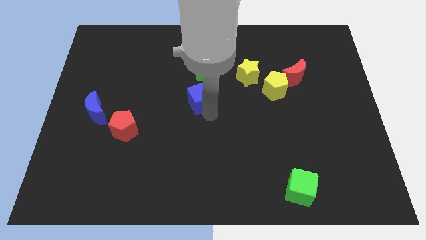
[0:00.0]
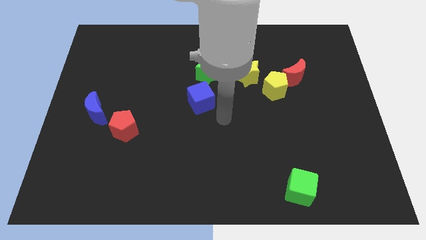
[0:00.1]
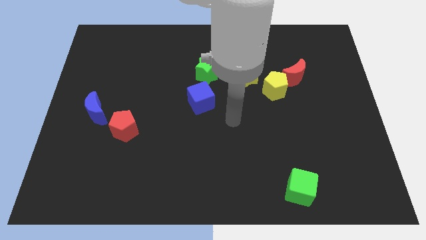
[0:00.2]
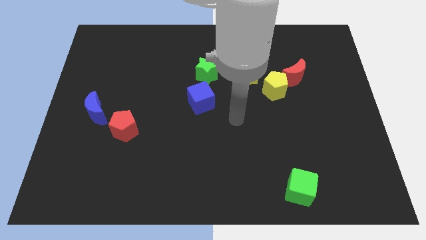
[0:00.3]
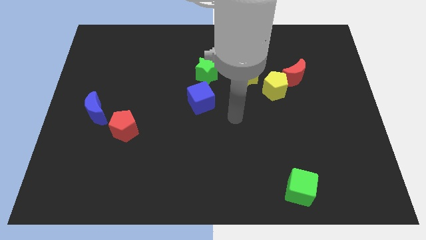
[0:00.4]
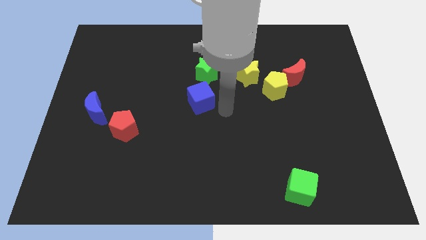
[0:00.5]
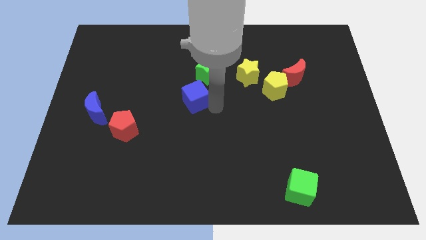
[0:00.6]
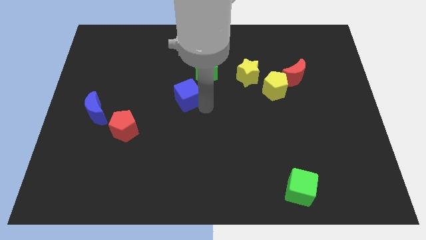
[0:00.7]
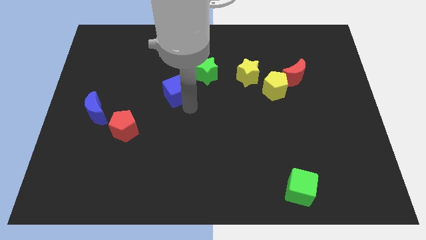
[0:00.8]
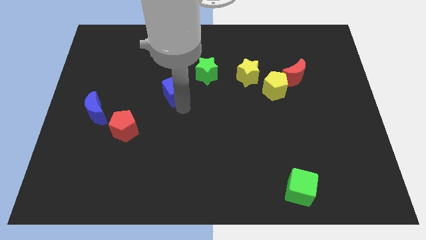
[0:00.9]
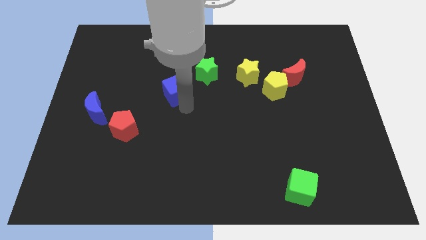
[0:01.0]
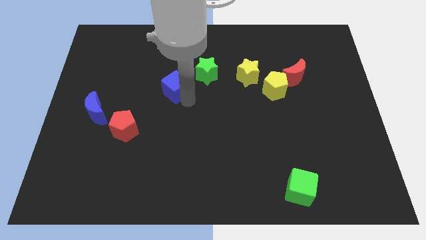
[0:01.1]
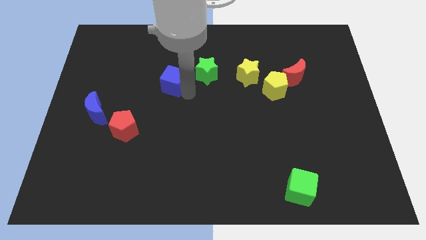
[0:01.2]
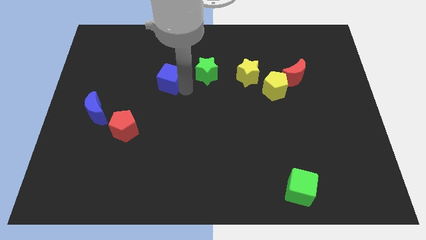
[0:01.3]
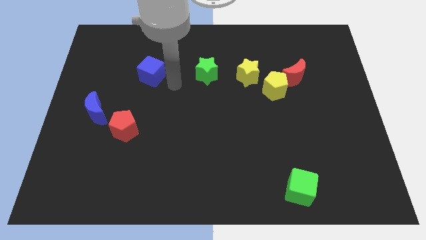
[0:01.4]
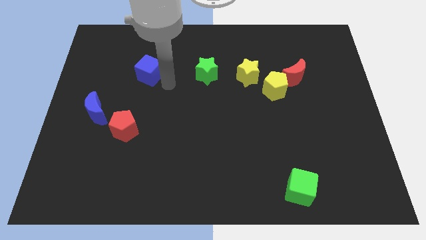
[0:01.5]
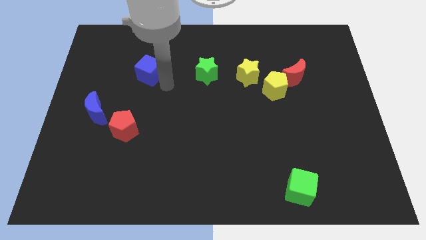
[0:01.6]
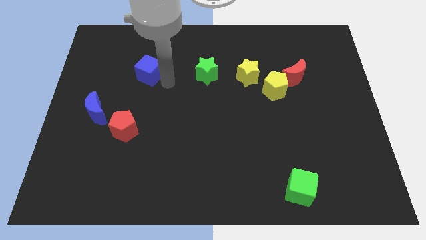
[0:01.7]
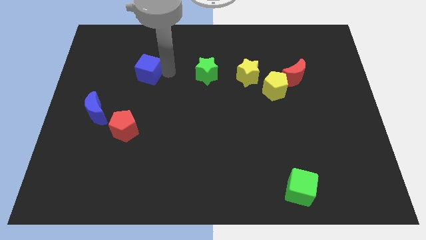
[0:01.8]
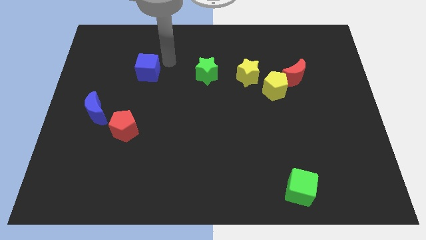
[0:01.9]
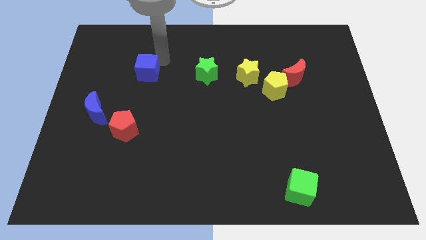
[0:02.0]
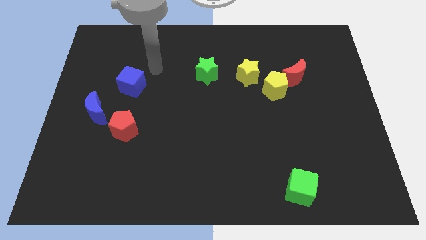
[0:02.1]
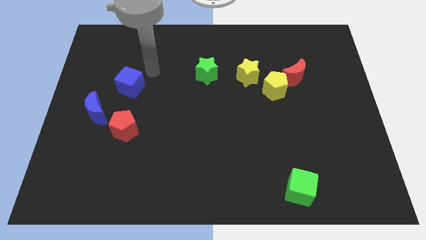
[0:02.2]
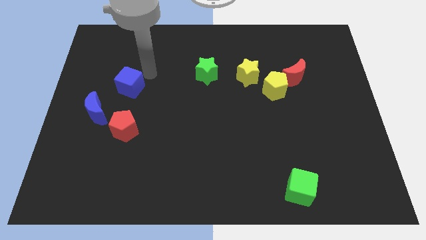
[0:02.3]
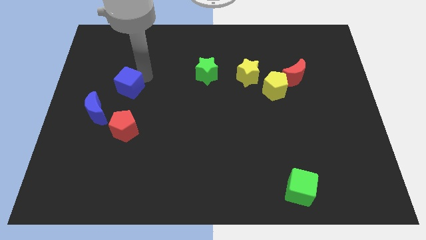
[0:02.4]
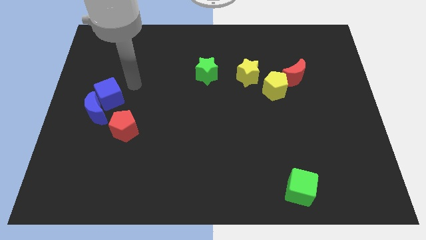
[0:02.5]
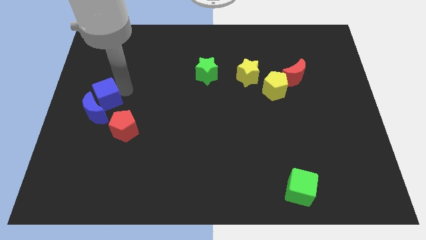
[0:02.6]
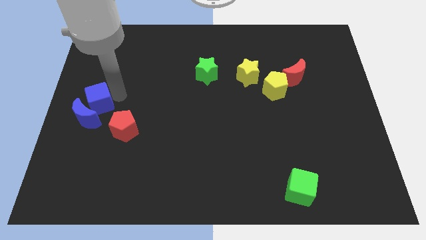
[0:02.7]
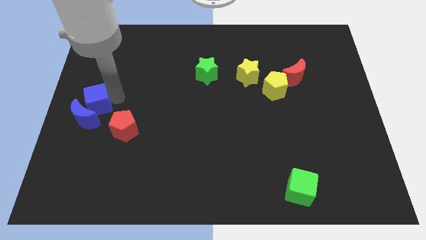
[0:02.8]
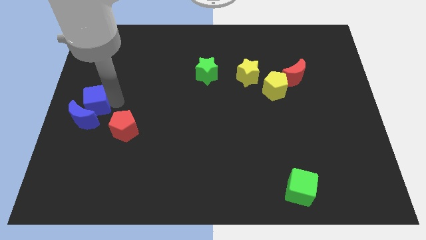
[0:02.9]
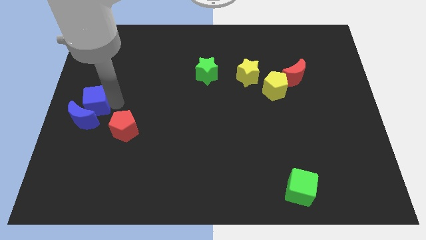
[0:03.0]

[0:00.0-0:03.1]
push the blue cube into the blue crescent

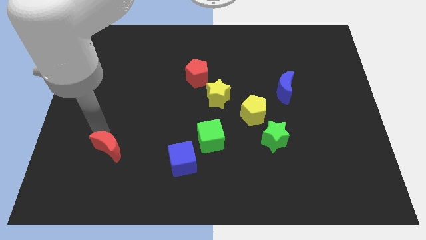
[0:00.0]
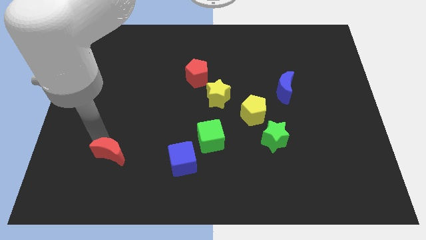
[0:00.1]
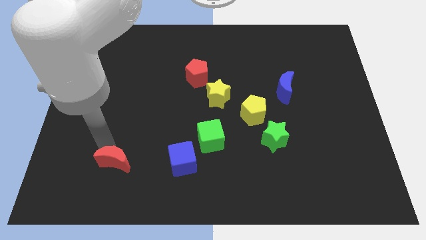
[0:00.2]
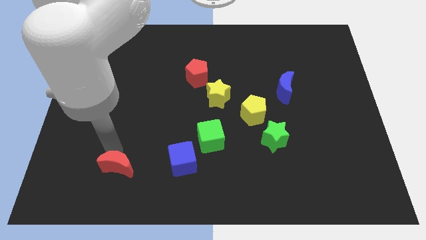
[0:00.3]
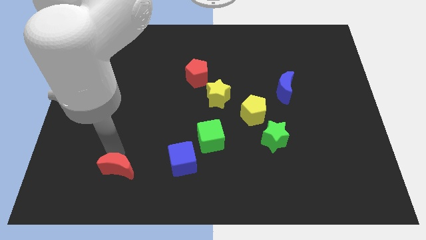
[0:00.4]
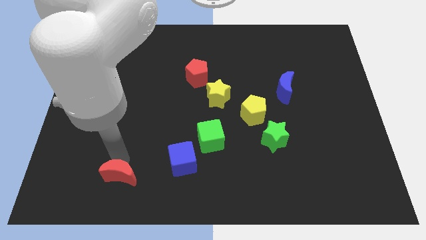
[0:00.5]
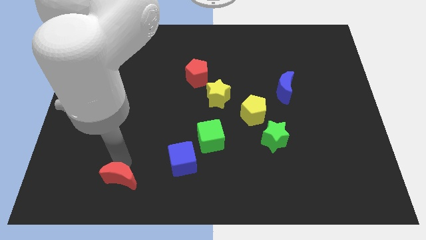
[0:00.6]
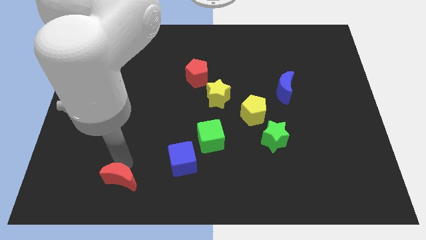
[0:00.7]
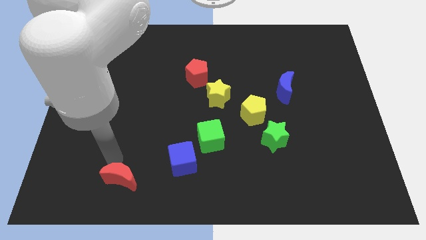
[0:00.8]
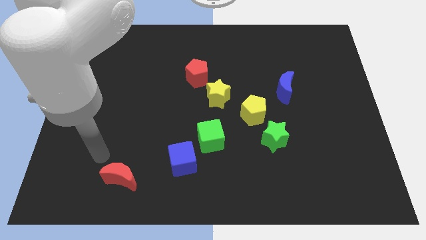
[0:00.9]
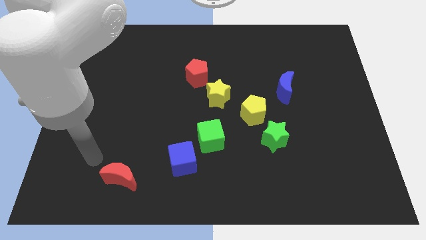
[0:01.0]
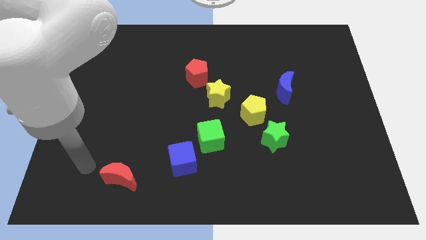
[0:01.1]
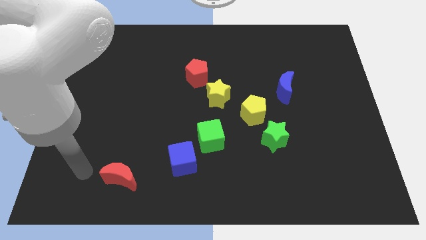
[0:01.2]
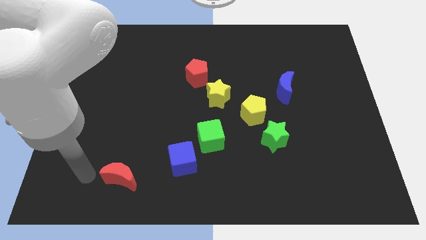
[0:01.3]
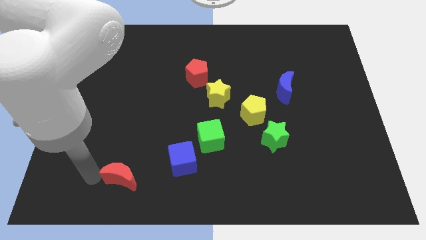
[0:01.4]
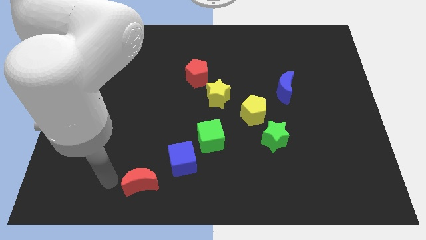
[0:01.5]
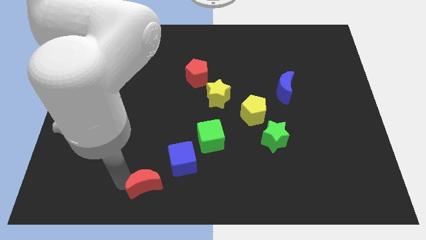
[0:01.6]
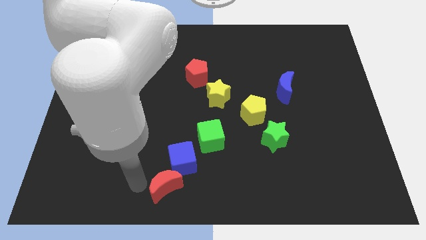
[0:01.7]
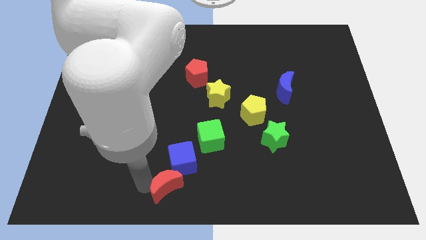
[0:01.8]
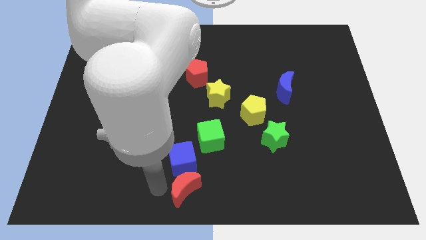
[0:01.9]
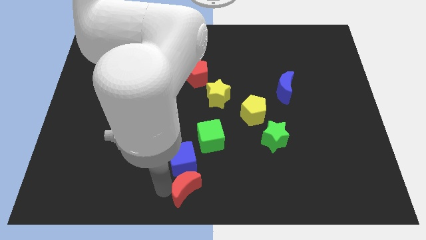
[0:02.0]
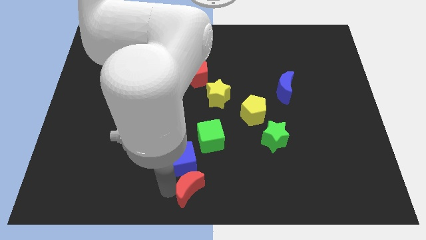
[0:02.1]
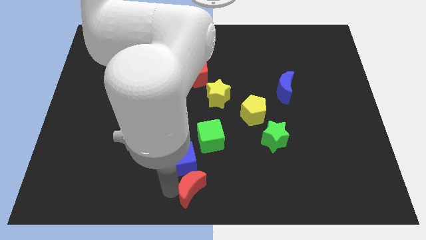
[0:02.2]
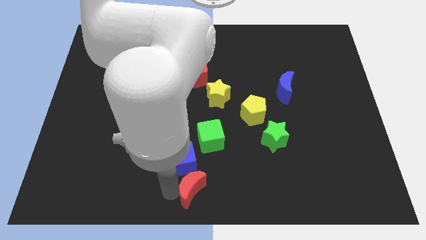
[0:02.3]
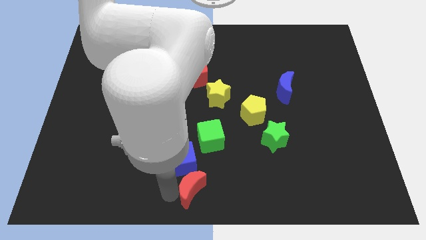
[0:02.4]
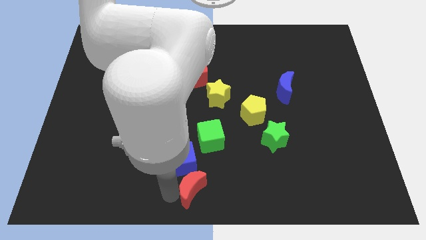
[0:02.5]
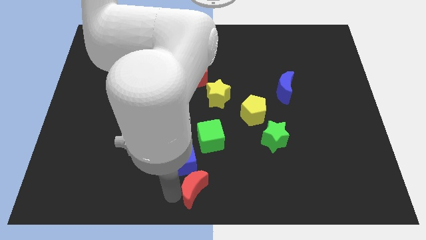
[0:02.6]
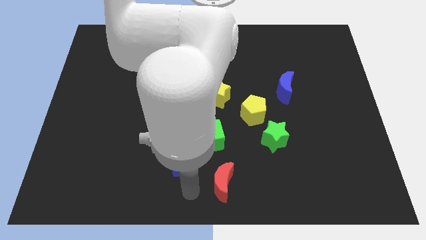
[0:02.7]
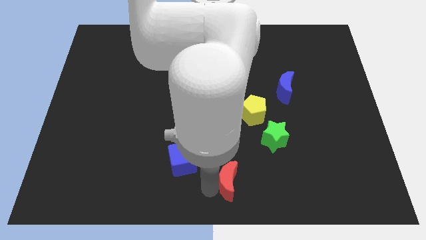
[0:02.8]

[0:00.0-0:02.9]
place the red moon below the green cube

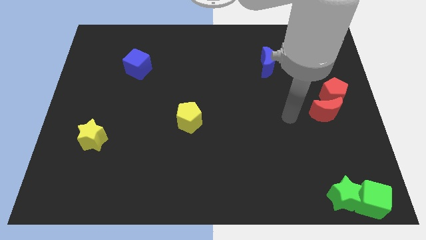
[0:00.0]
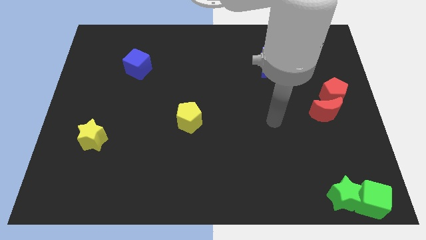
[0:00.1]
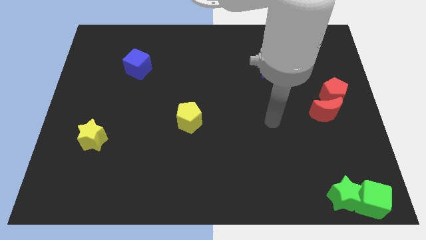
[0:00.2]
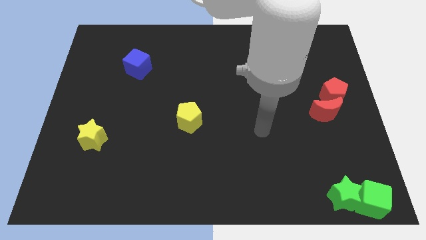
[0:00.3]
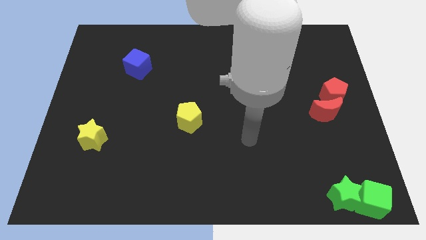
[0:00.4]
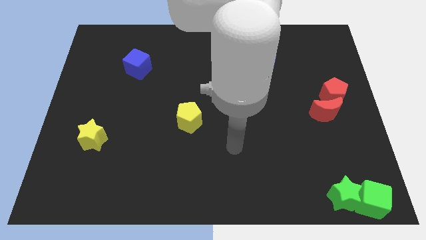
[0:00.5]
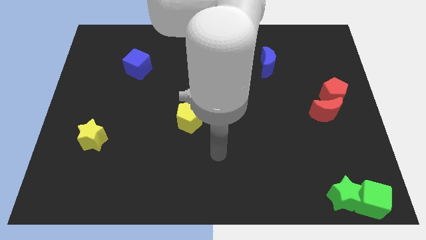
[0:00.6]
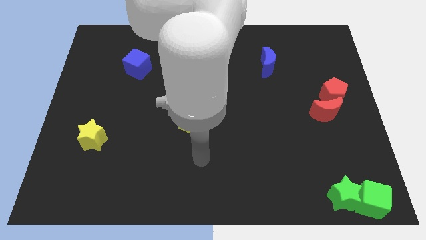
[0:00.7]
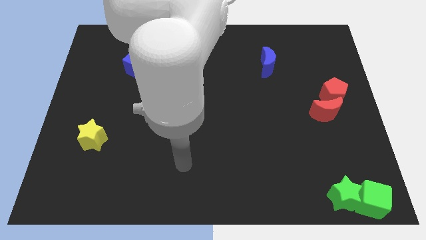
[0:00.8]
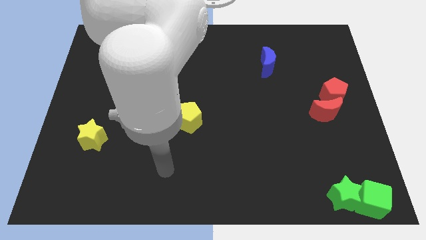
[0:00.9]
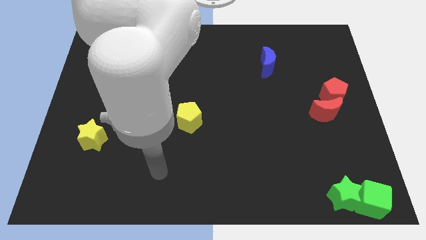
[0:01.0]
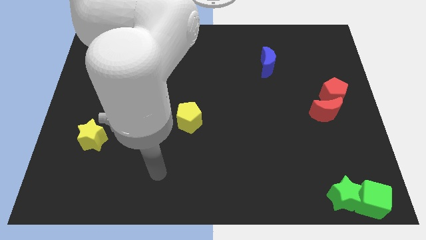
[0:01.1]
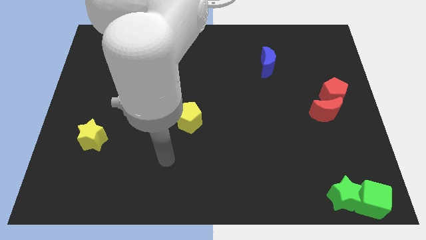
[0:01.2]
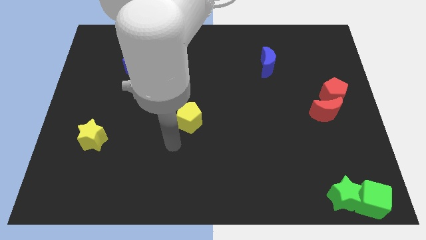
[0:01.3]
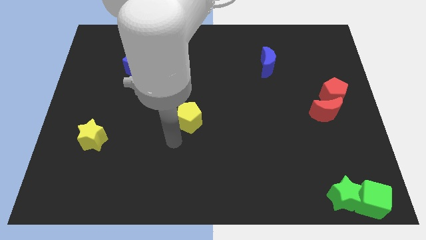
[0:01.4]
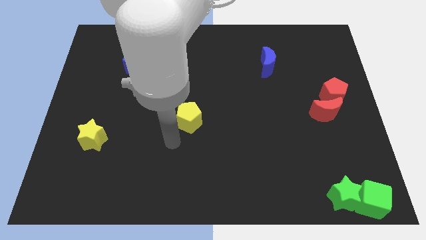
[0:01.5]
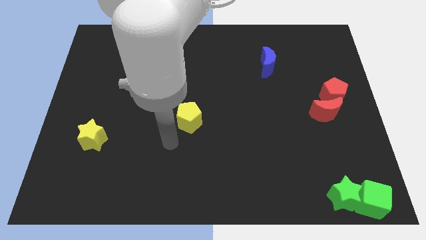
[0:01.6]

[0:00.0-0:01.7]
place your arm at the bottom left side of yellow pentagon

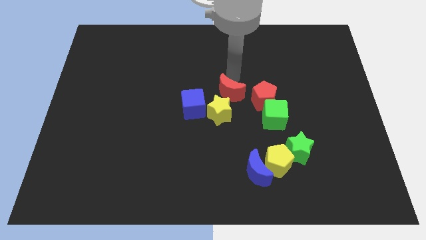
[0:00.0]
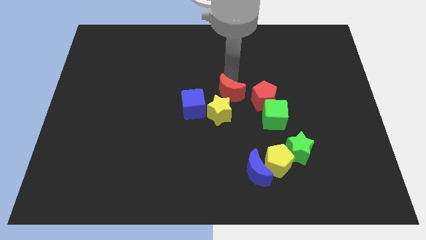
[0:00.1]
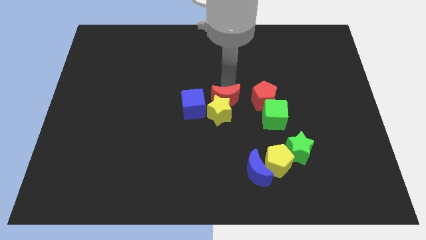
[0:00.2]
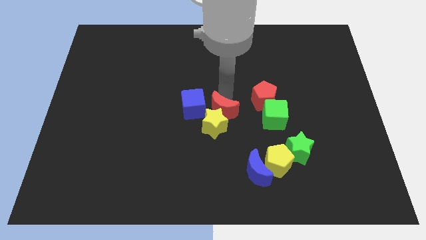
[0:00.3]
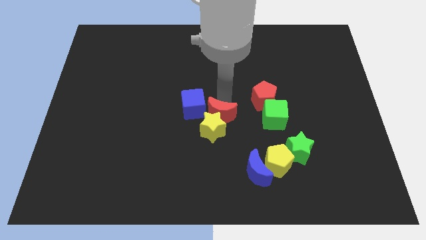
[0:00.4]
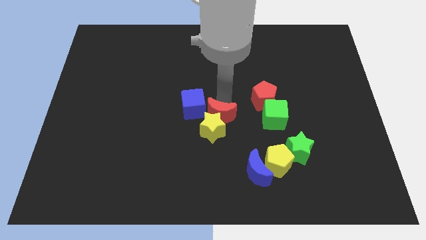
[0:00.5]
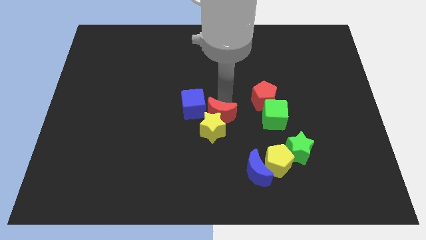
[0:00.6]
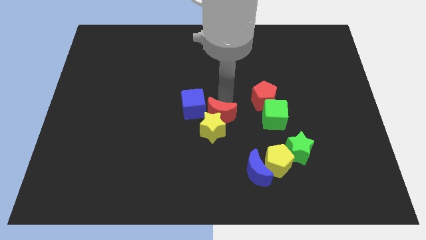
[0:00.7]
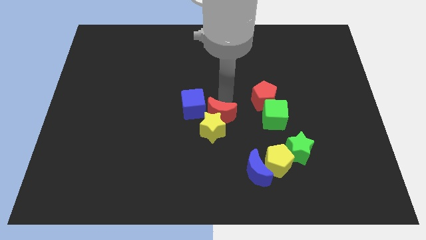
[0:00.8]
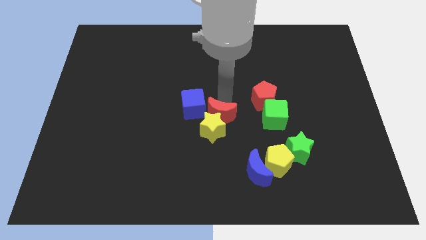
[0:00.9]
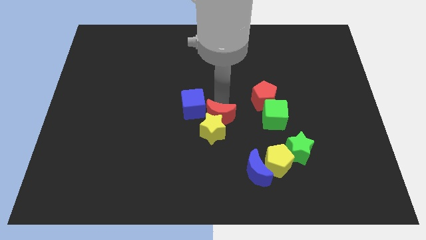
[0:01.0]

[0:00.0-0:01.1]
push the red crescent into the yellow star
